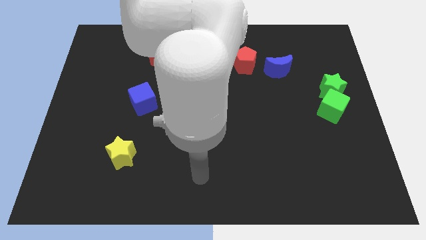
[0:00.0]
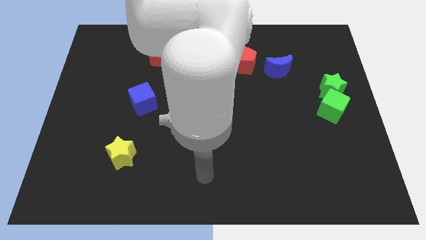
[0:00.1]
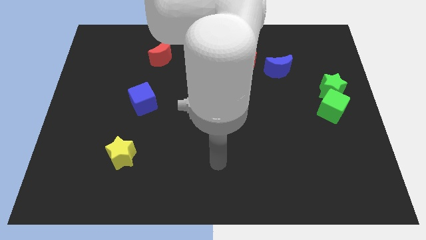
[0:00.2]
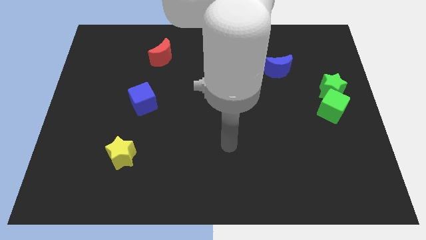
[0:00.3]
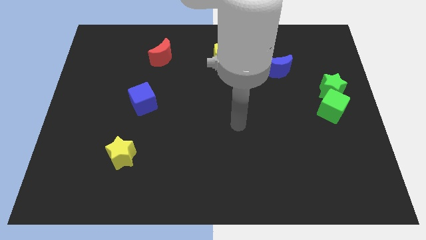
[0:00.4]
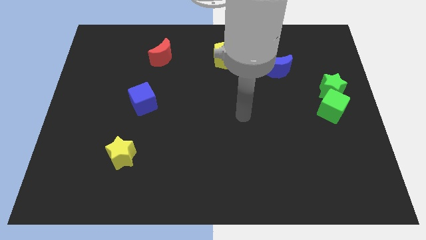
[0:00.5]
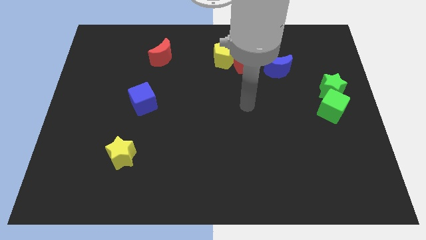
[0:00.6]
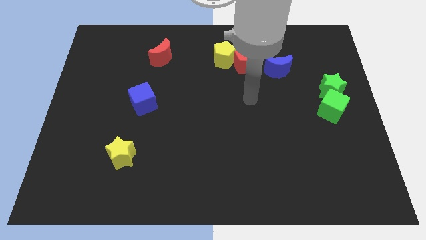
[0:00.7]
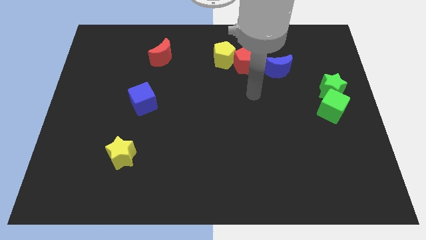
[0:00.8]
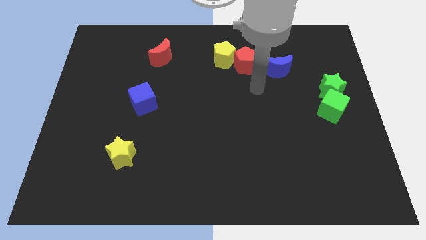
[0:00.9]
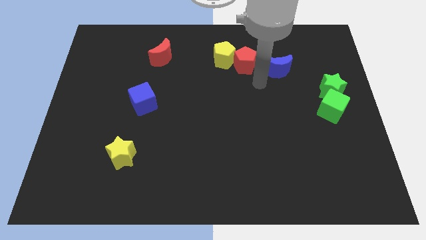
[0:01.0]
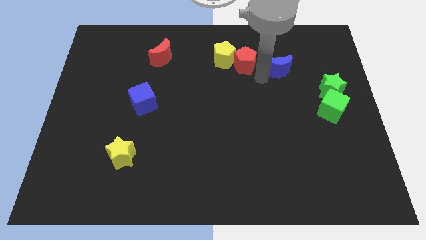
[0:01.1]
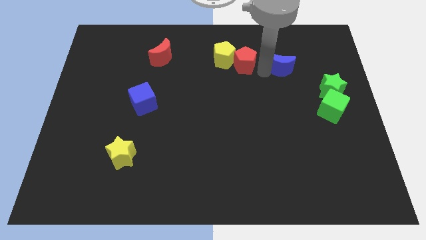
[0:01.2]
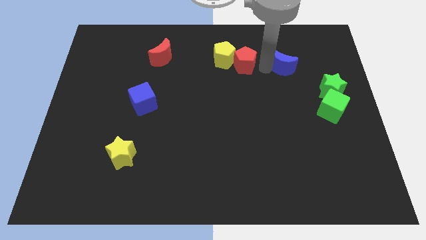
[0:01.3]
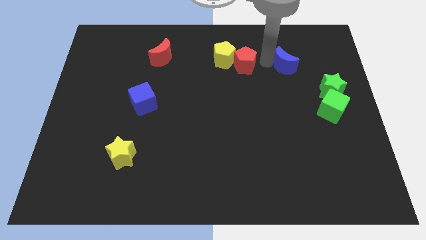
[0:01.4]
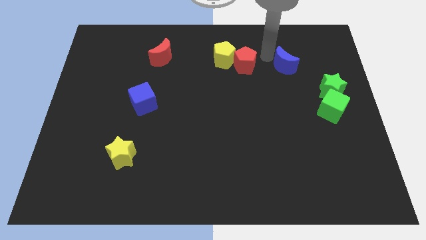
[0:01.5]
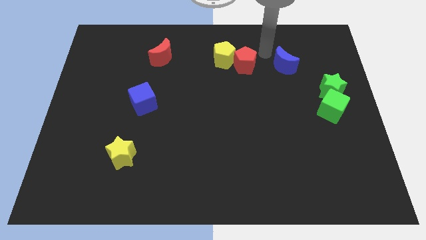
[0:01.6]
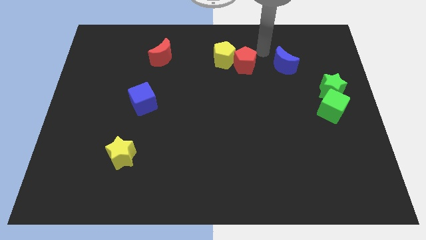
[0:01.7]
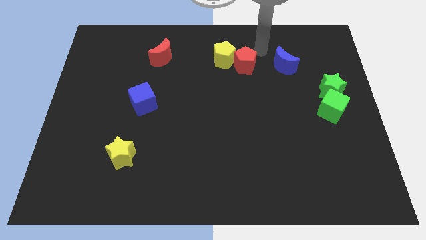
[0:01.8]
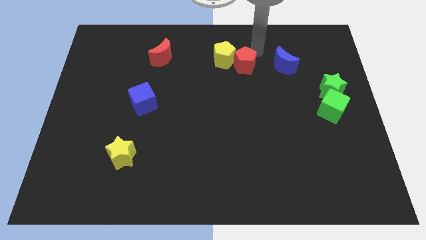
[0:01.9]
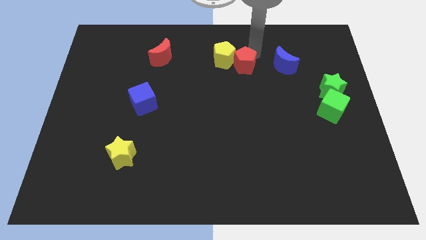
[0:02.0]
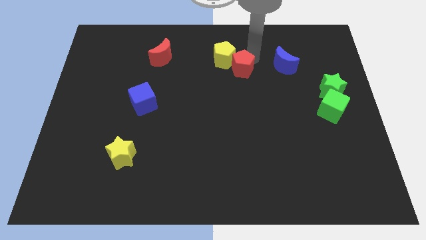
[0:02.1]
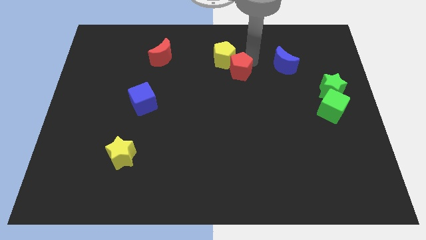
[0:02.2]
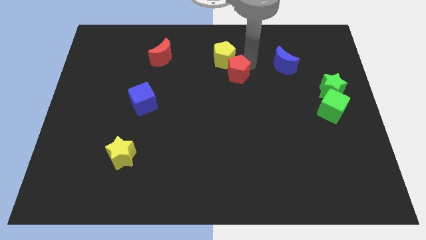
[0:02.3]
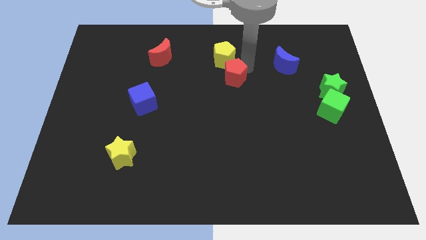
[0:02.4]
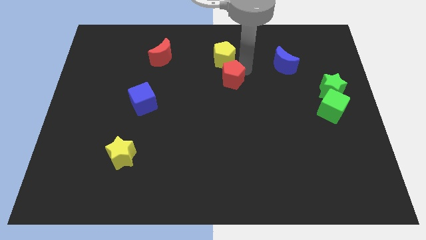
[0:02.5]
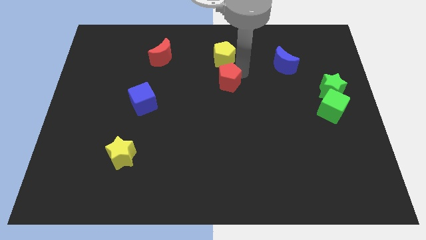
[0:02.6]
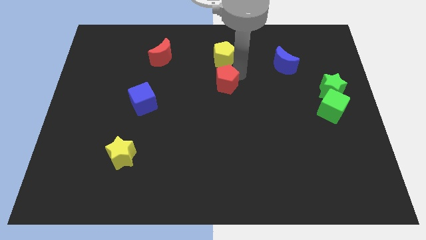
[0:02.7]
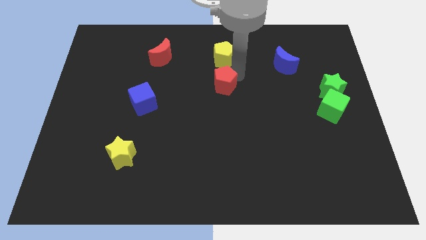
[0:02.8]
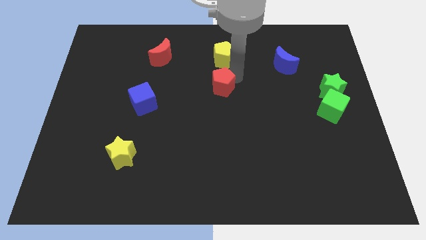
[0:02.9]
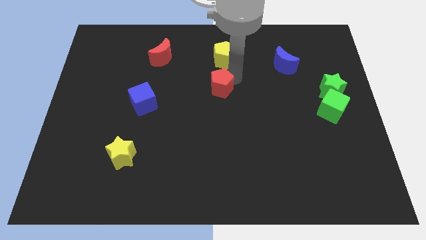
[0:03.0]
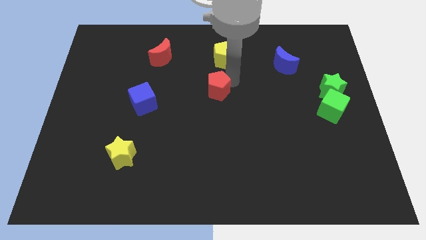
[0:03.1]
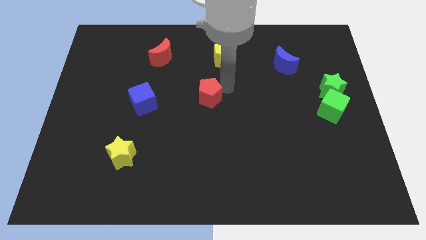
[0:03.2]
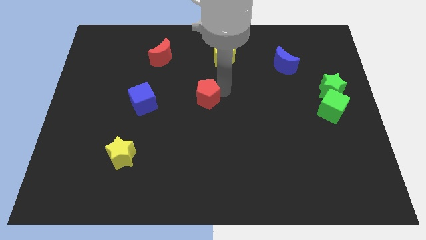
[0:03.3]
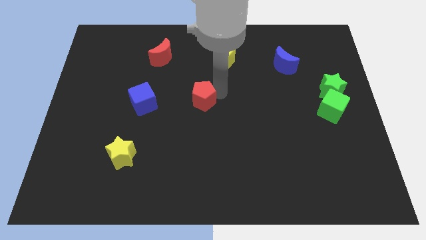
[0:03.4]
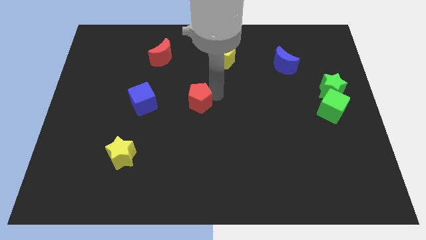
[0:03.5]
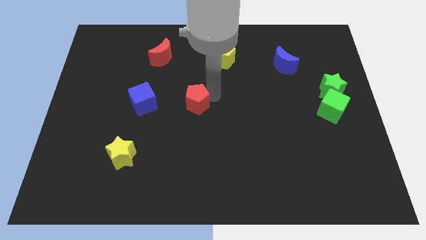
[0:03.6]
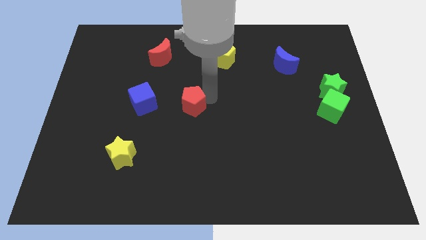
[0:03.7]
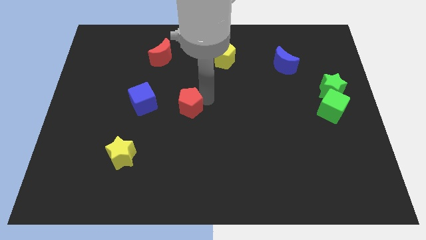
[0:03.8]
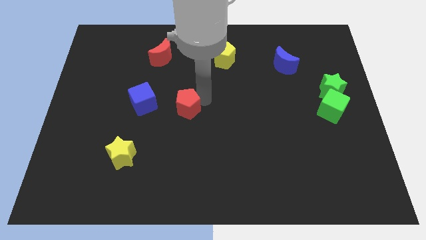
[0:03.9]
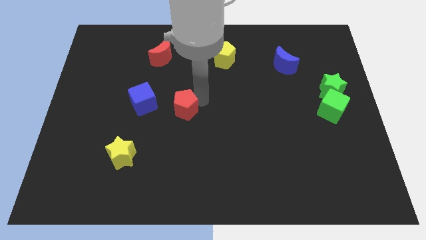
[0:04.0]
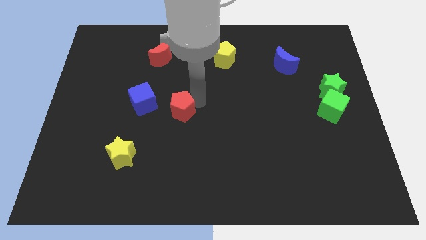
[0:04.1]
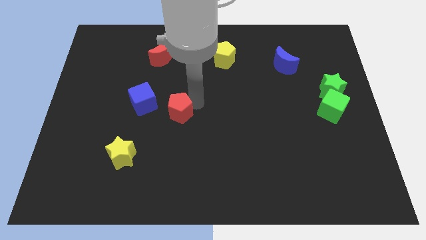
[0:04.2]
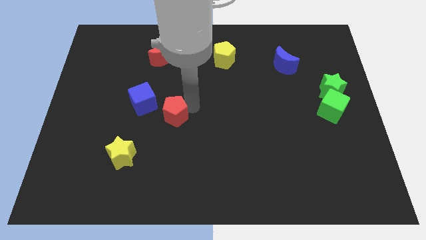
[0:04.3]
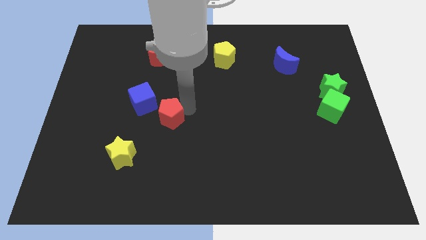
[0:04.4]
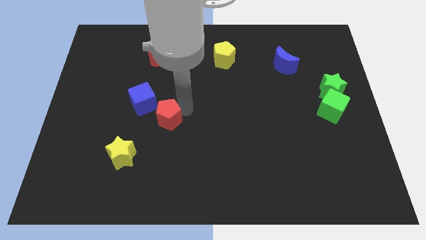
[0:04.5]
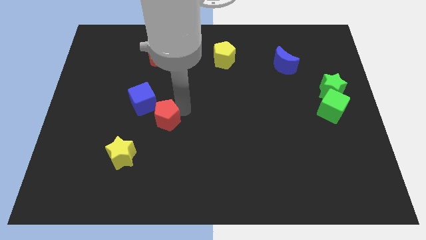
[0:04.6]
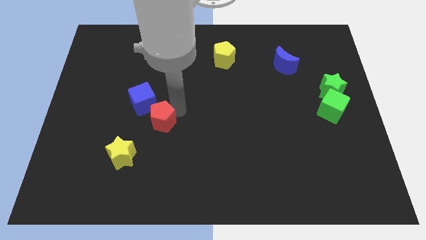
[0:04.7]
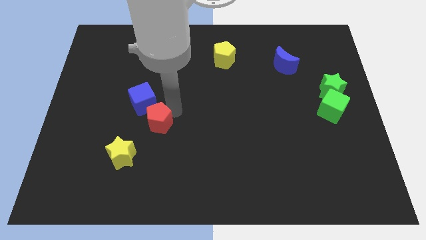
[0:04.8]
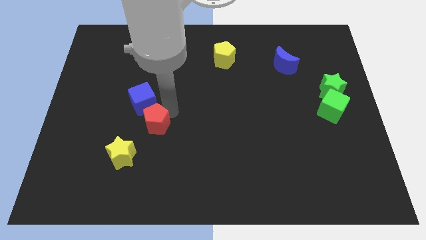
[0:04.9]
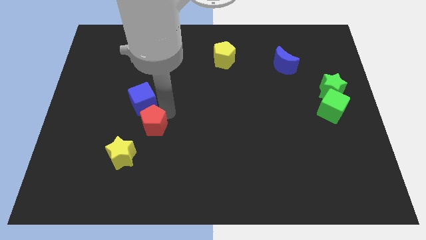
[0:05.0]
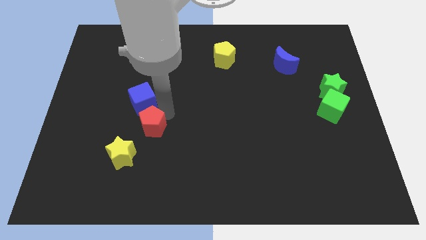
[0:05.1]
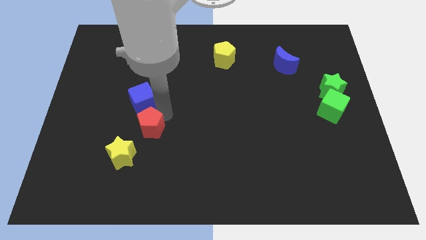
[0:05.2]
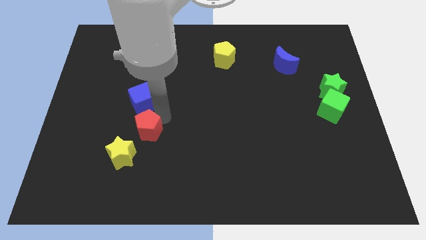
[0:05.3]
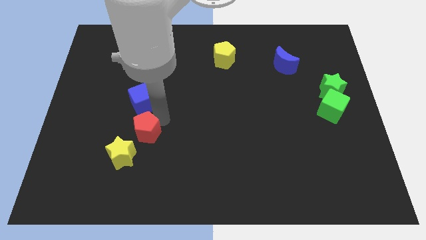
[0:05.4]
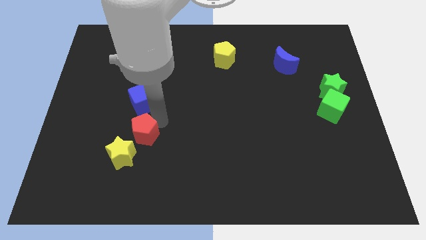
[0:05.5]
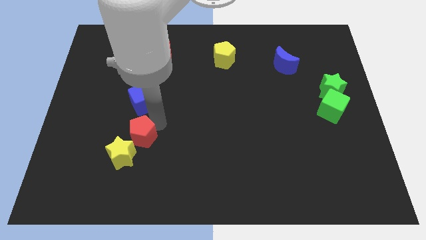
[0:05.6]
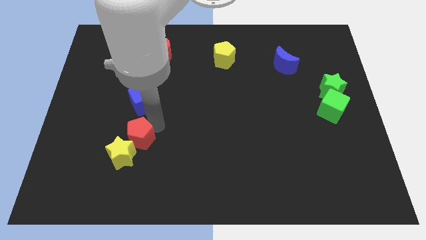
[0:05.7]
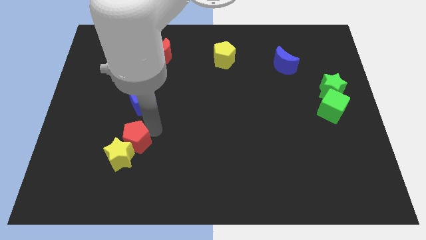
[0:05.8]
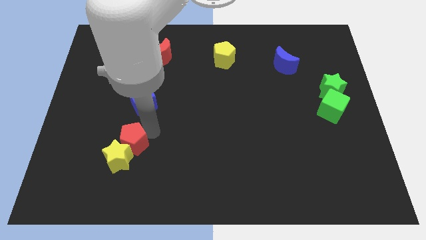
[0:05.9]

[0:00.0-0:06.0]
slide the red pentagon towards the yellow star

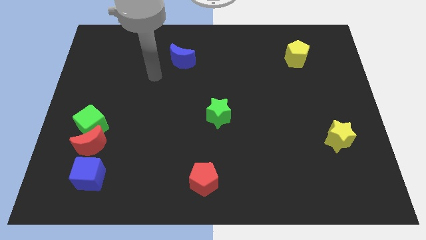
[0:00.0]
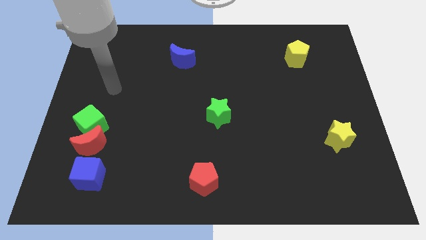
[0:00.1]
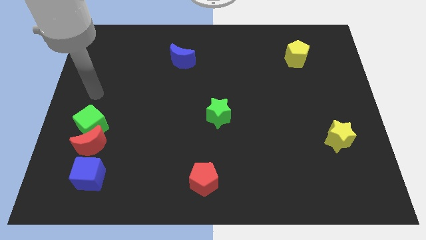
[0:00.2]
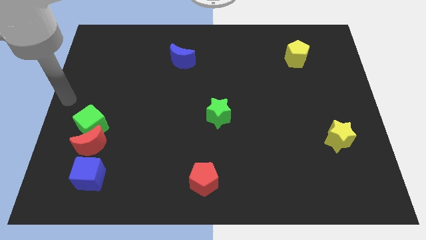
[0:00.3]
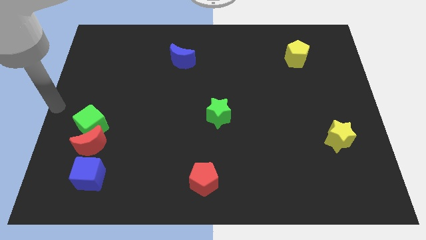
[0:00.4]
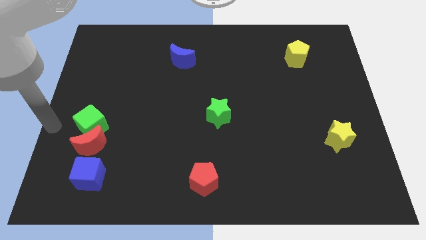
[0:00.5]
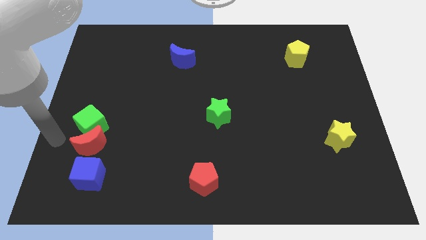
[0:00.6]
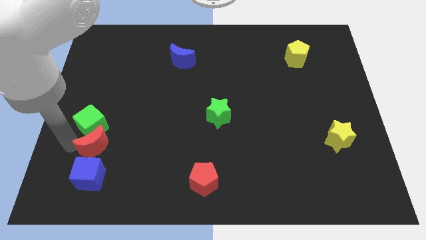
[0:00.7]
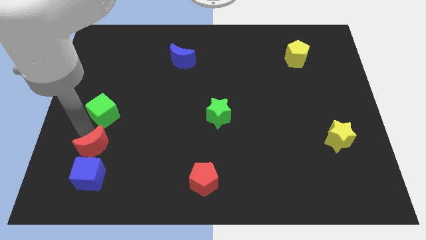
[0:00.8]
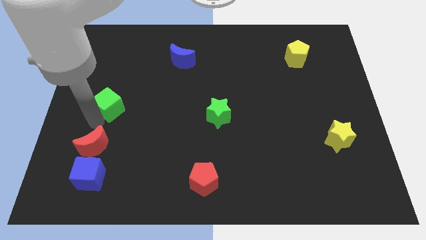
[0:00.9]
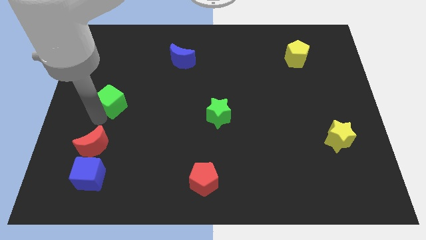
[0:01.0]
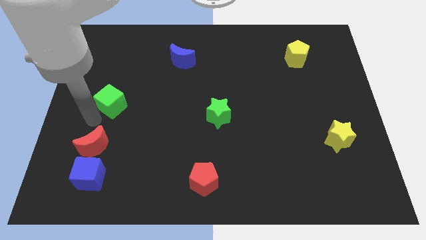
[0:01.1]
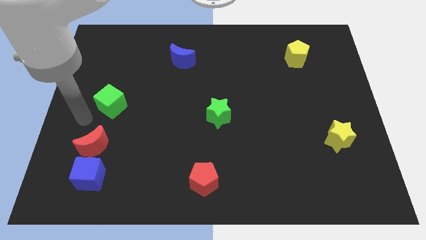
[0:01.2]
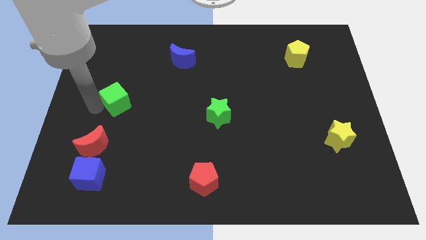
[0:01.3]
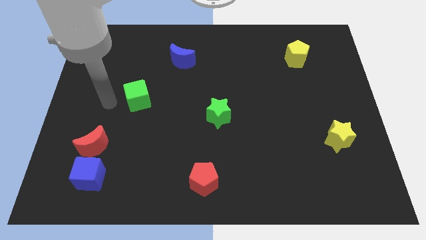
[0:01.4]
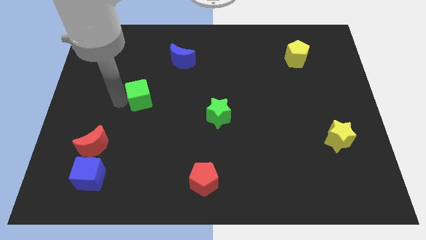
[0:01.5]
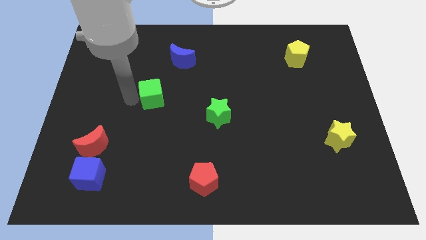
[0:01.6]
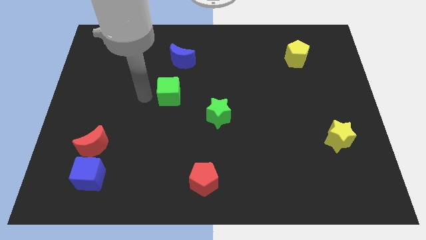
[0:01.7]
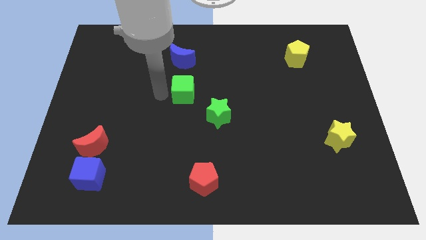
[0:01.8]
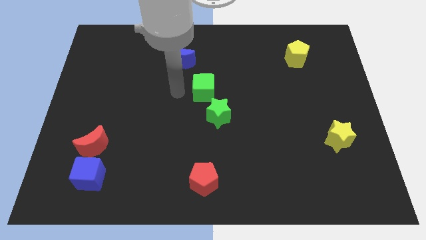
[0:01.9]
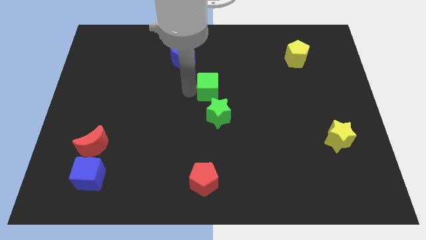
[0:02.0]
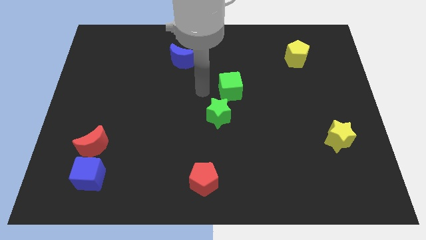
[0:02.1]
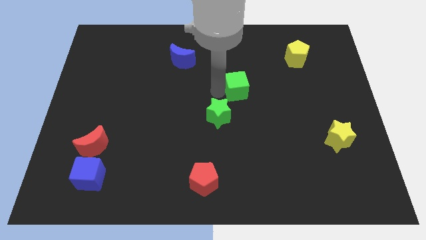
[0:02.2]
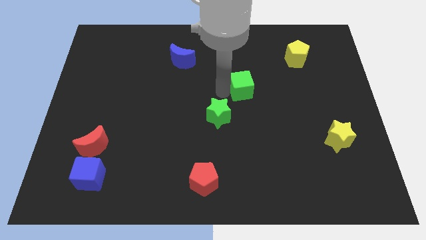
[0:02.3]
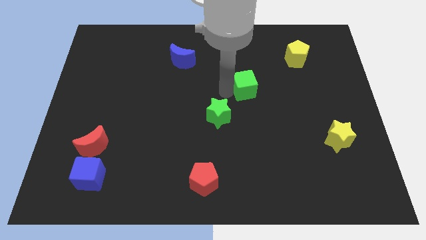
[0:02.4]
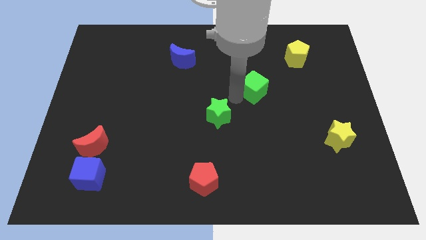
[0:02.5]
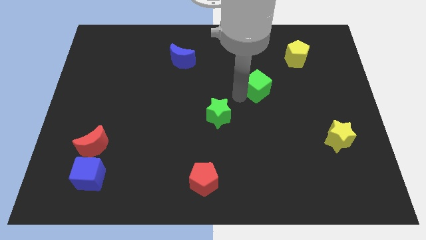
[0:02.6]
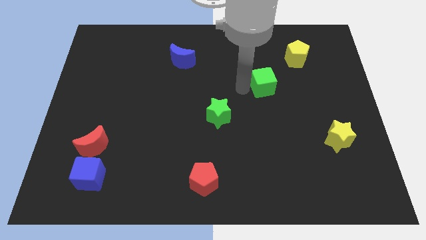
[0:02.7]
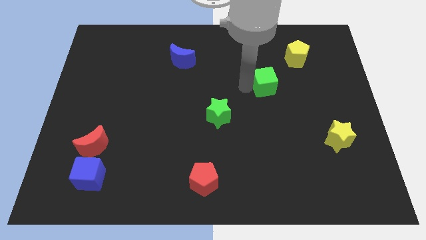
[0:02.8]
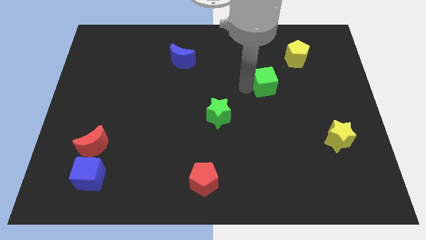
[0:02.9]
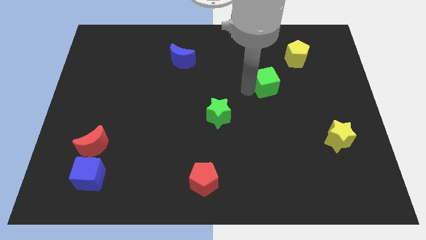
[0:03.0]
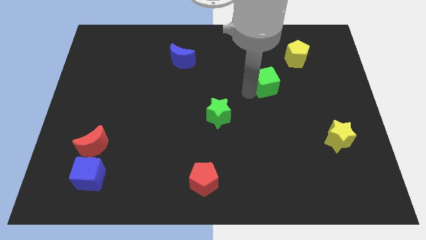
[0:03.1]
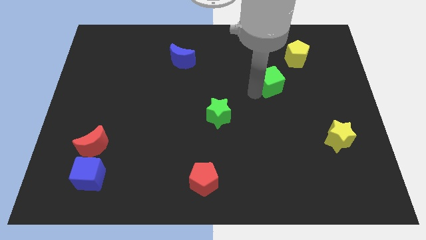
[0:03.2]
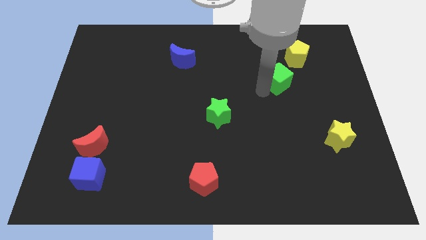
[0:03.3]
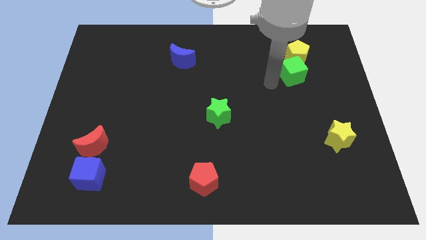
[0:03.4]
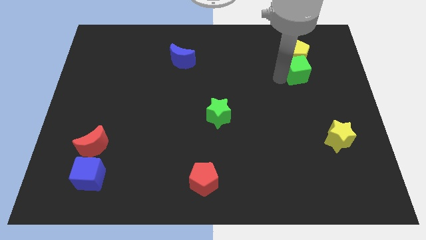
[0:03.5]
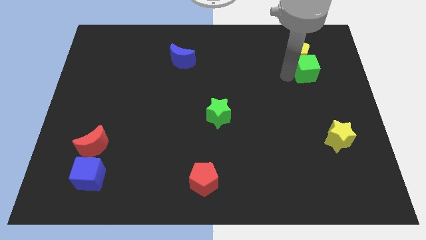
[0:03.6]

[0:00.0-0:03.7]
put the green cube towards the yellow pentagon
